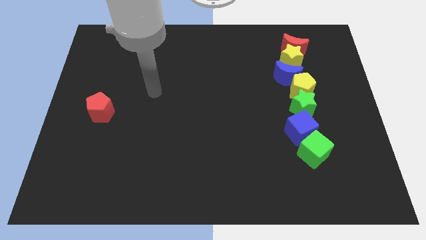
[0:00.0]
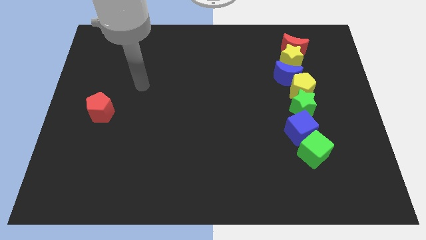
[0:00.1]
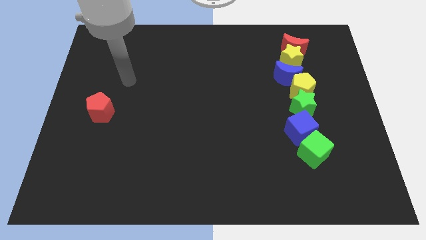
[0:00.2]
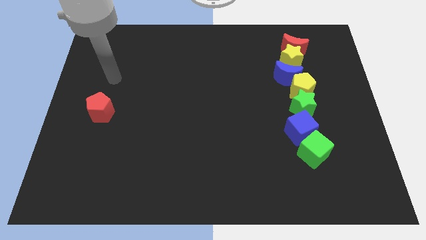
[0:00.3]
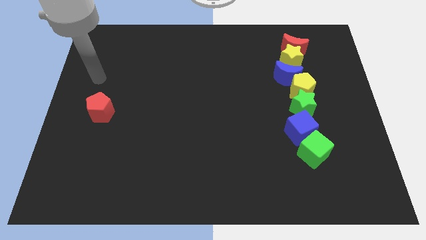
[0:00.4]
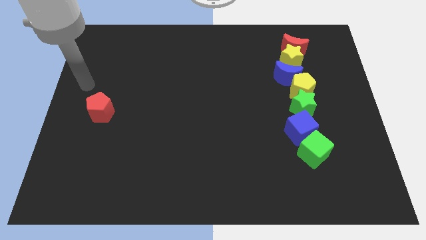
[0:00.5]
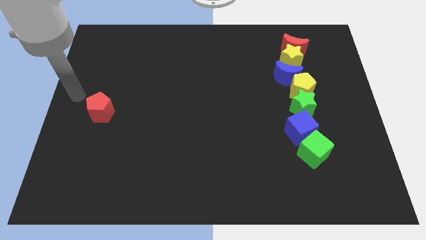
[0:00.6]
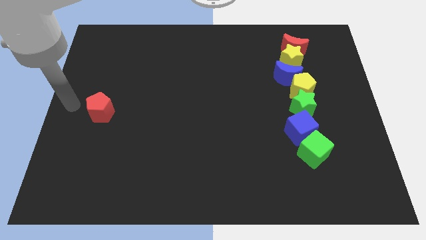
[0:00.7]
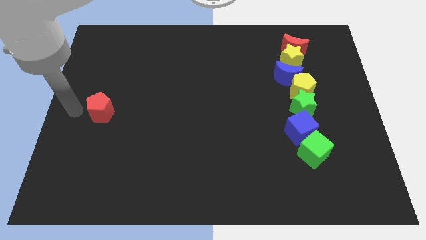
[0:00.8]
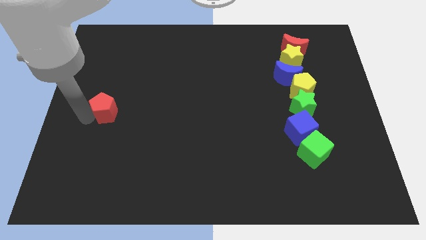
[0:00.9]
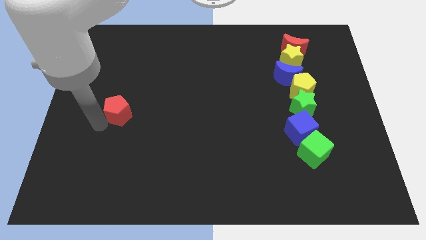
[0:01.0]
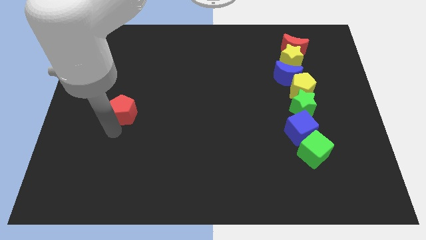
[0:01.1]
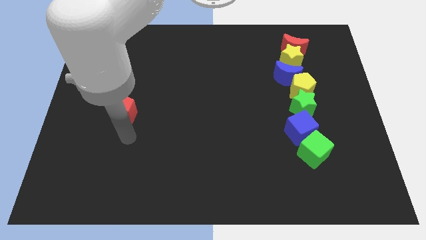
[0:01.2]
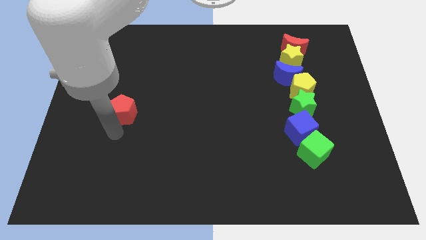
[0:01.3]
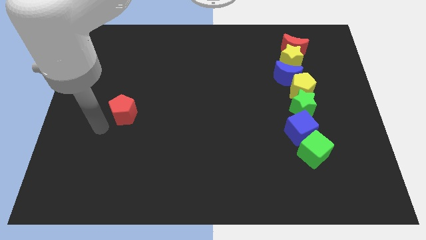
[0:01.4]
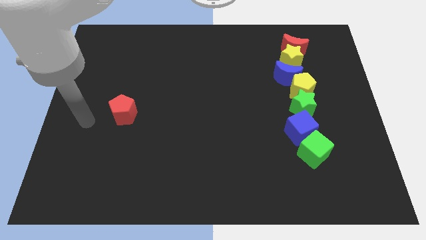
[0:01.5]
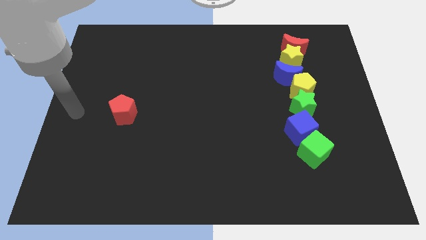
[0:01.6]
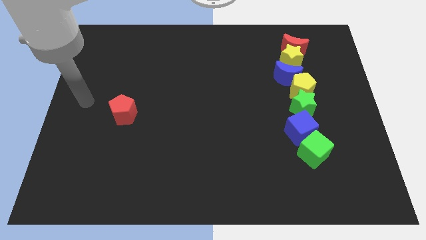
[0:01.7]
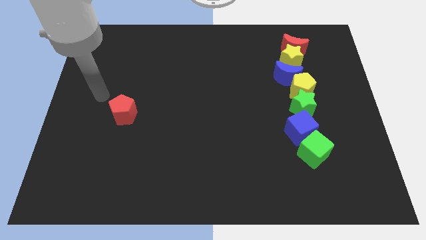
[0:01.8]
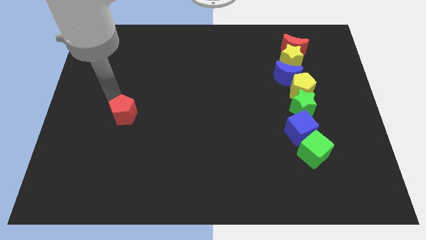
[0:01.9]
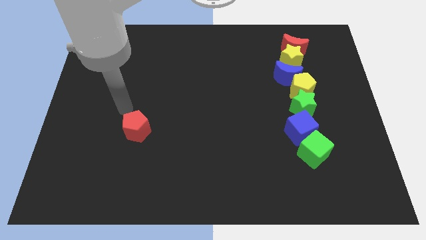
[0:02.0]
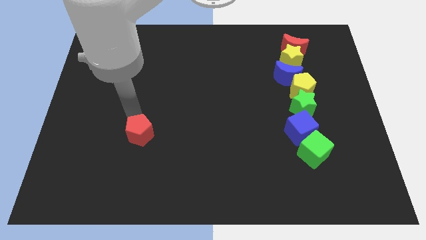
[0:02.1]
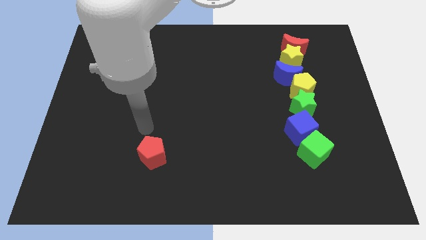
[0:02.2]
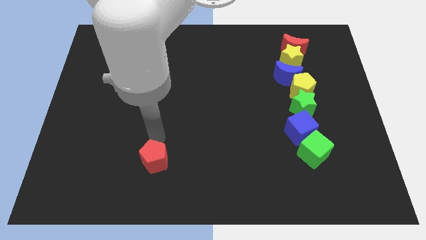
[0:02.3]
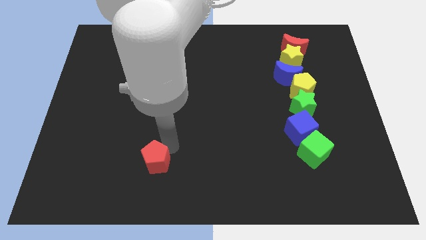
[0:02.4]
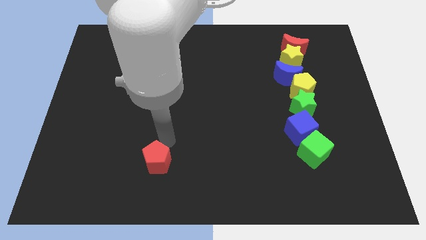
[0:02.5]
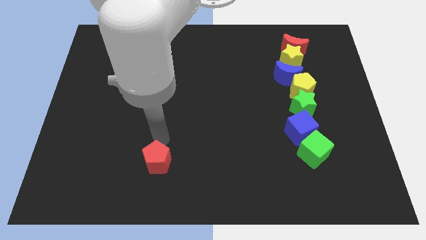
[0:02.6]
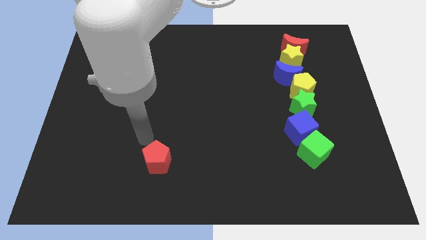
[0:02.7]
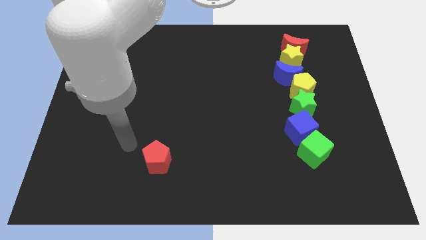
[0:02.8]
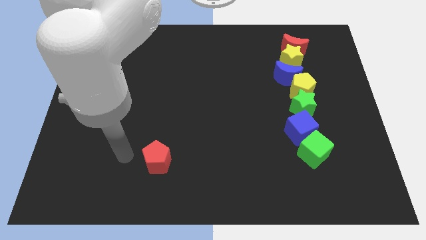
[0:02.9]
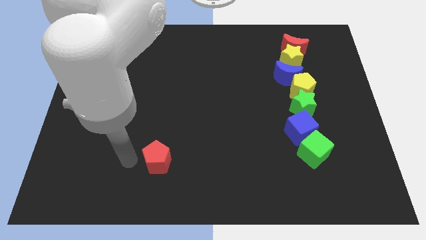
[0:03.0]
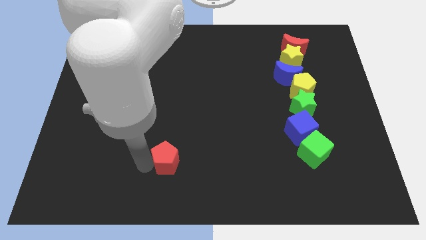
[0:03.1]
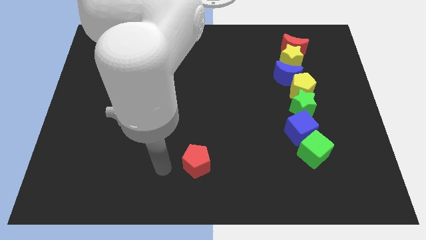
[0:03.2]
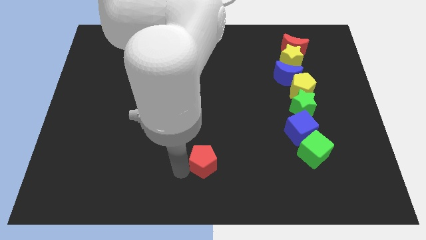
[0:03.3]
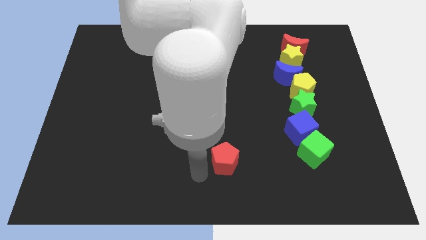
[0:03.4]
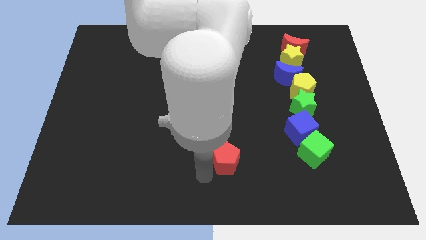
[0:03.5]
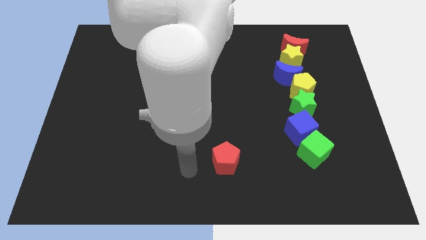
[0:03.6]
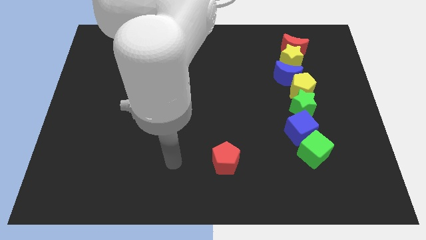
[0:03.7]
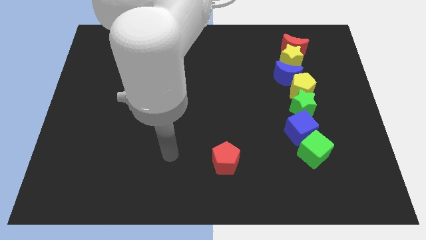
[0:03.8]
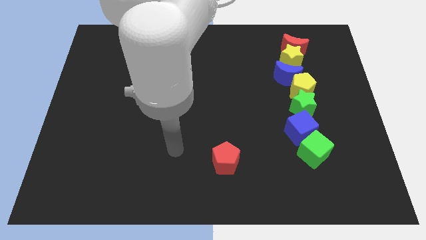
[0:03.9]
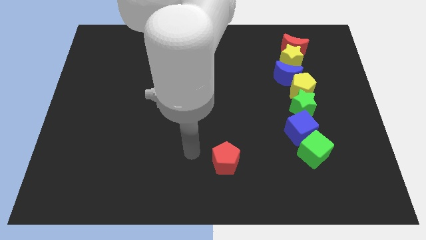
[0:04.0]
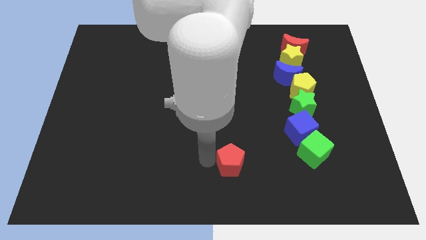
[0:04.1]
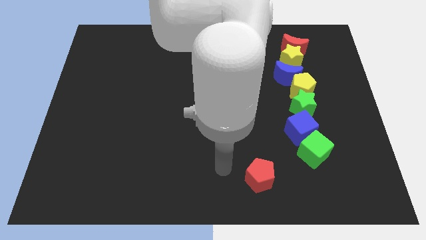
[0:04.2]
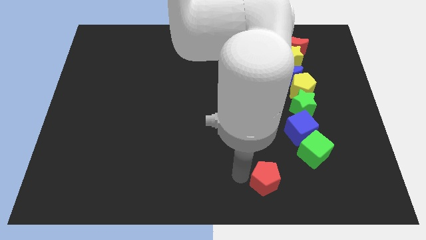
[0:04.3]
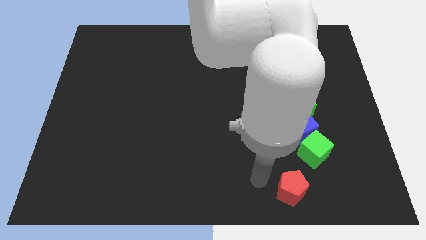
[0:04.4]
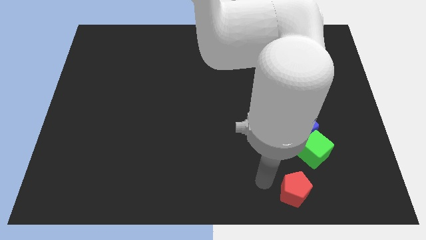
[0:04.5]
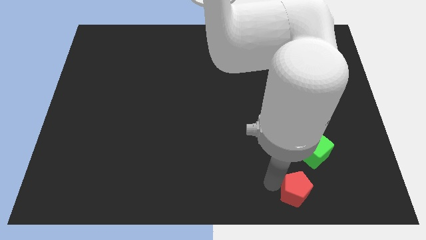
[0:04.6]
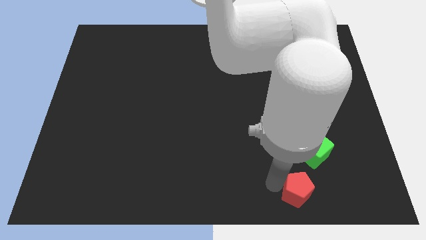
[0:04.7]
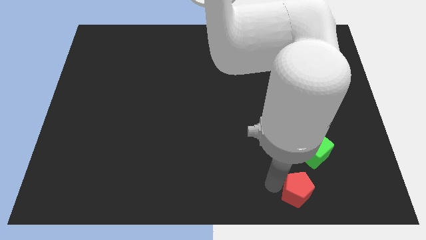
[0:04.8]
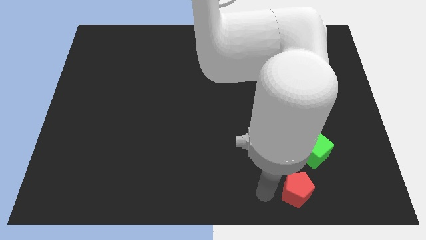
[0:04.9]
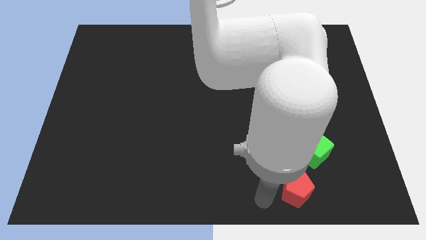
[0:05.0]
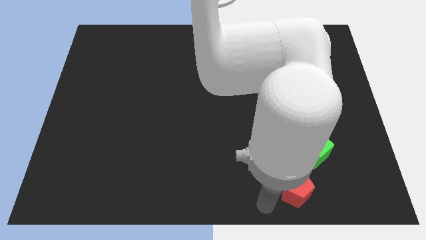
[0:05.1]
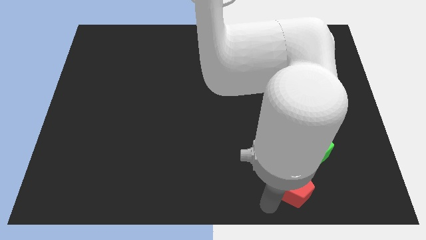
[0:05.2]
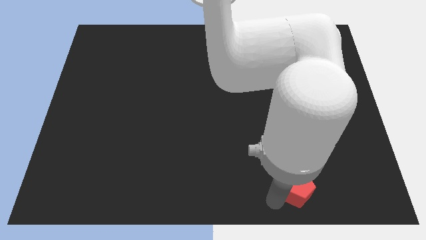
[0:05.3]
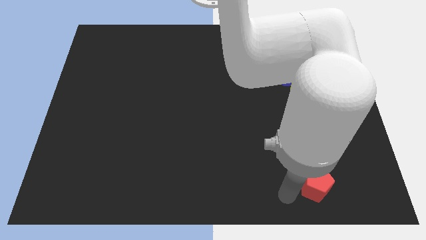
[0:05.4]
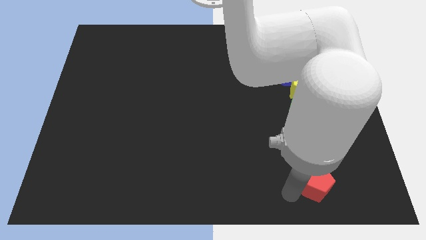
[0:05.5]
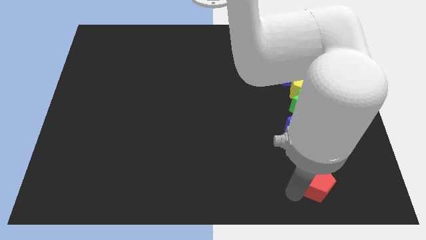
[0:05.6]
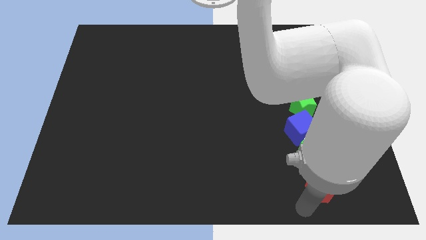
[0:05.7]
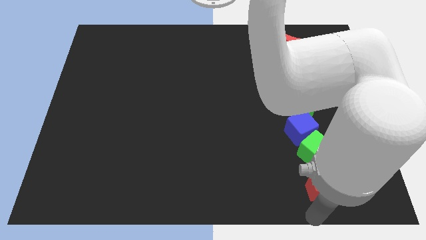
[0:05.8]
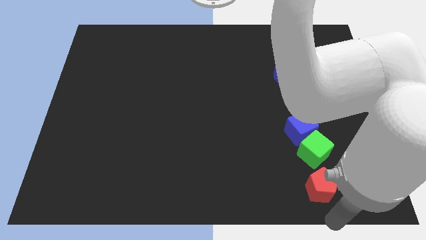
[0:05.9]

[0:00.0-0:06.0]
move the red pentagon close bottom to the green cube

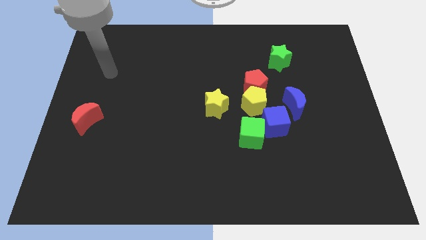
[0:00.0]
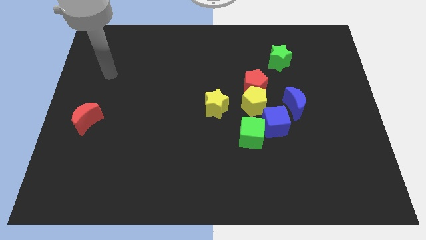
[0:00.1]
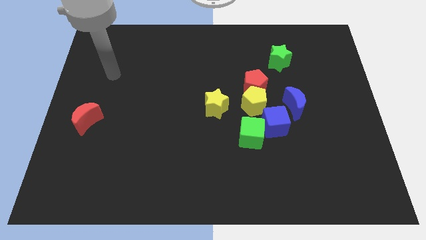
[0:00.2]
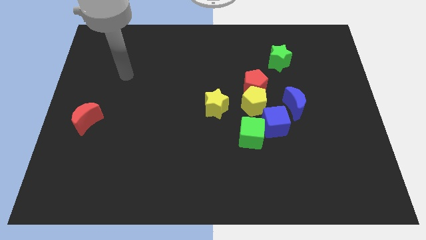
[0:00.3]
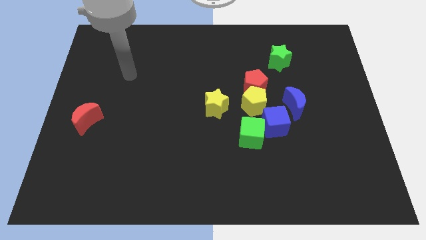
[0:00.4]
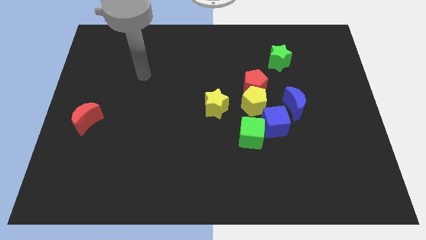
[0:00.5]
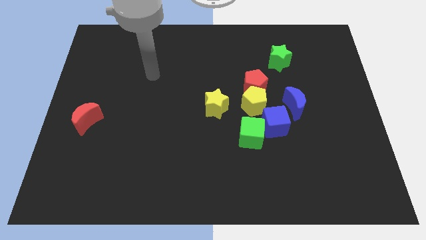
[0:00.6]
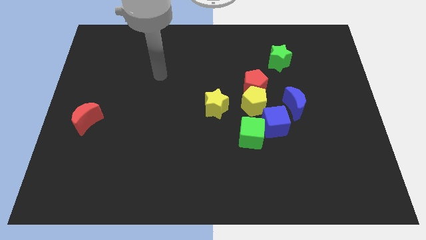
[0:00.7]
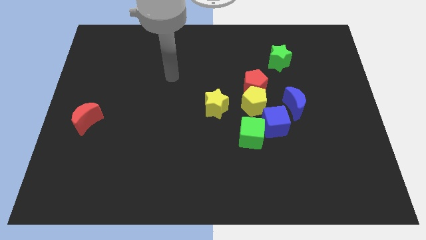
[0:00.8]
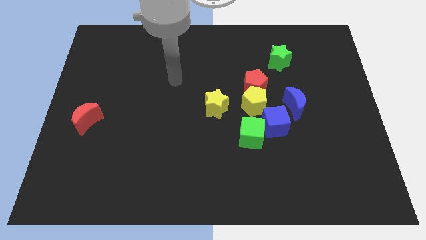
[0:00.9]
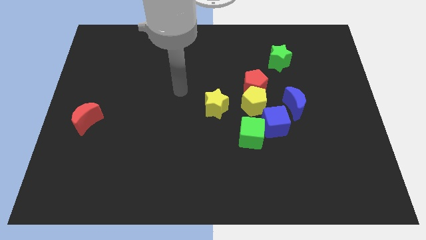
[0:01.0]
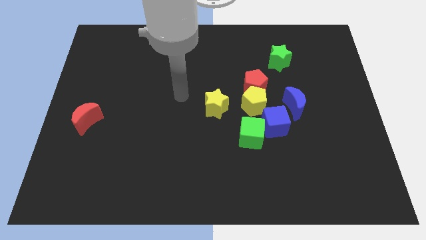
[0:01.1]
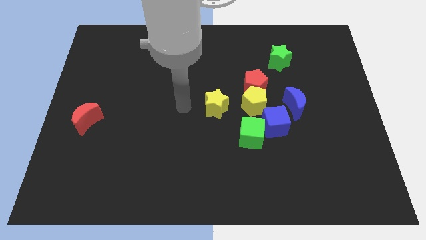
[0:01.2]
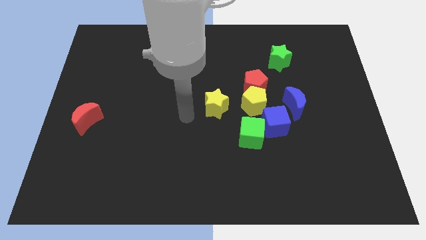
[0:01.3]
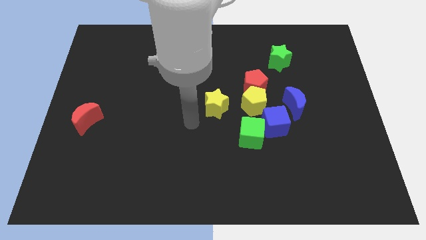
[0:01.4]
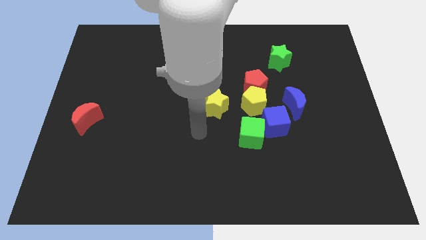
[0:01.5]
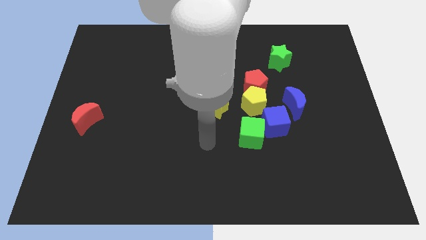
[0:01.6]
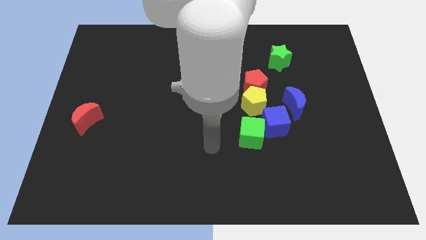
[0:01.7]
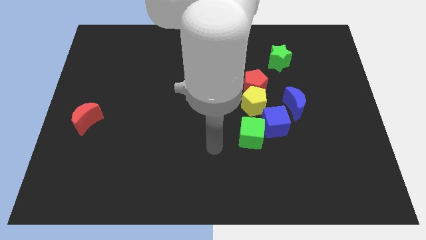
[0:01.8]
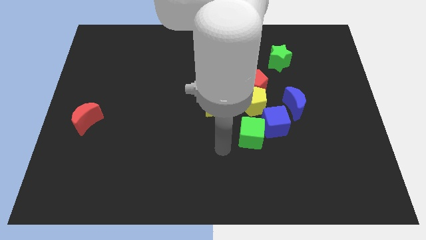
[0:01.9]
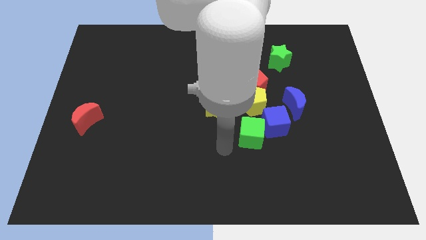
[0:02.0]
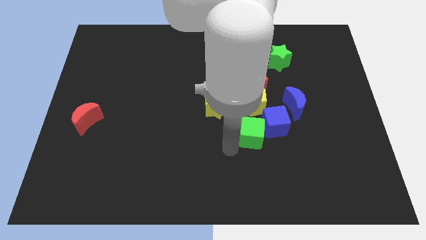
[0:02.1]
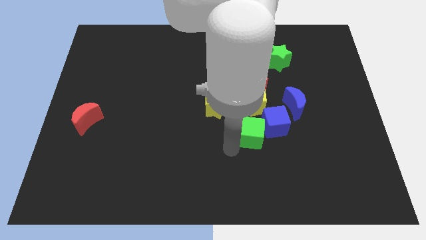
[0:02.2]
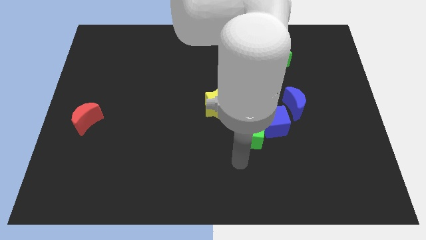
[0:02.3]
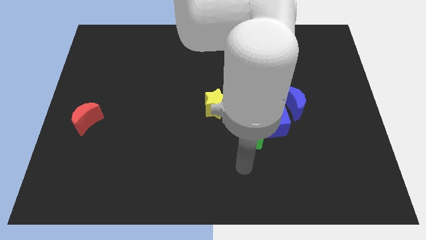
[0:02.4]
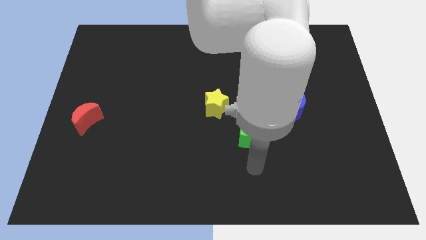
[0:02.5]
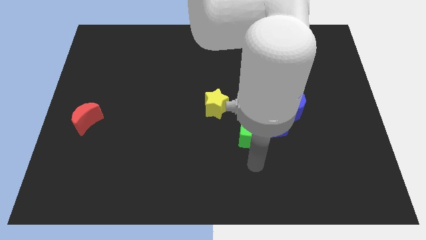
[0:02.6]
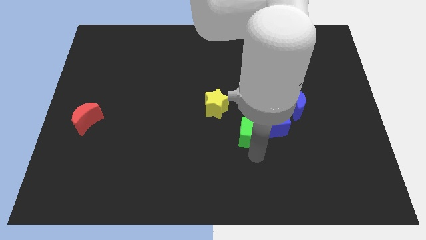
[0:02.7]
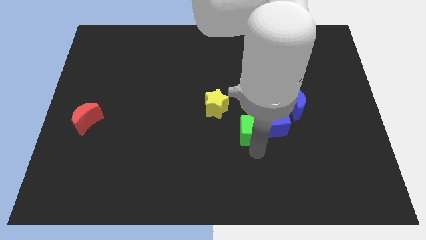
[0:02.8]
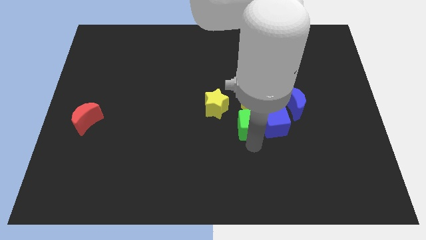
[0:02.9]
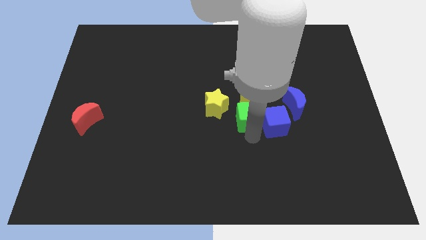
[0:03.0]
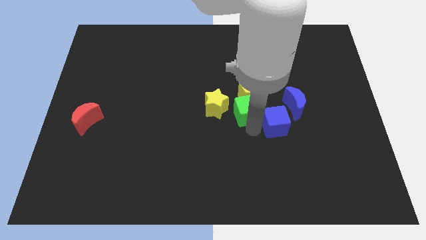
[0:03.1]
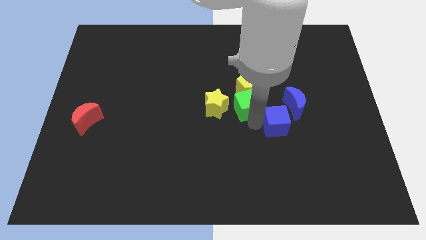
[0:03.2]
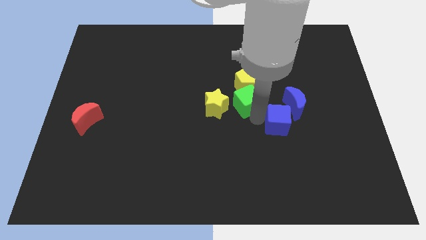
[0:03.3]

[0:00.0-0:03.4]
push the green cube into the bottom side of the yellow pentagon
